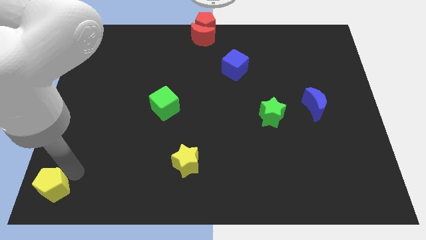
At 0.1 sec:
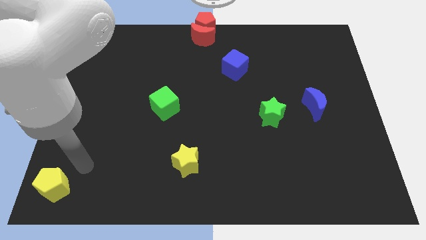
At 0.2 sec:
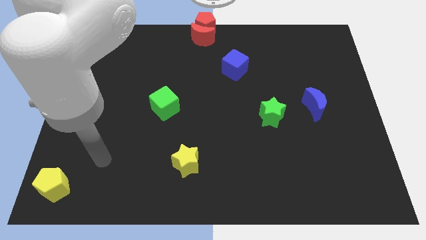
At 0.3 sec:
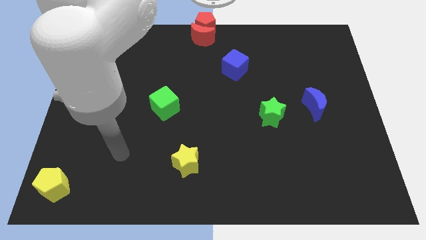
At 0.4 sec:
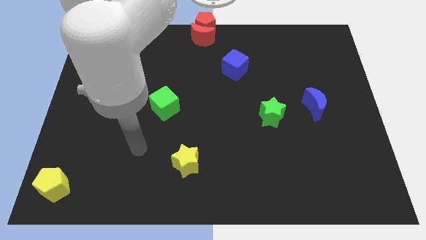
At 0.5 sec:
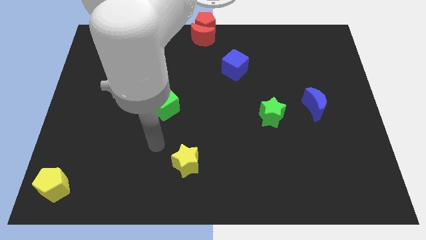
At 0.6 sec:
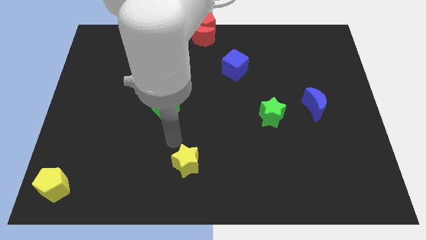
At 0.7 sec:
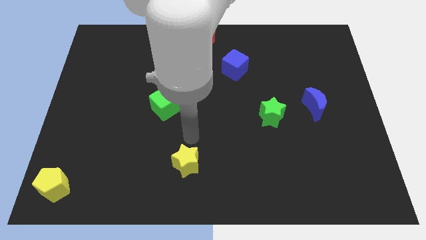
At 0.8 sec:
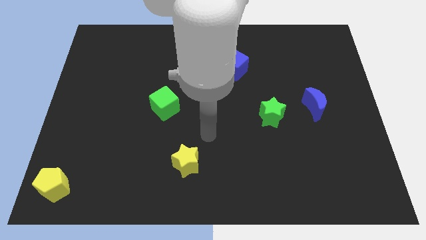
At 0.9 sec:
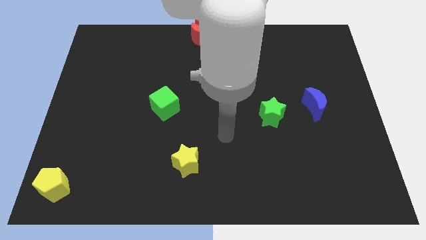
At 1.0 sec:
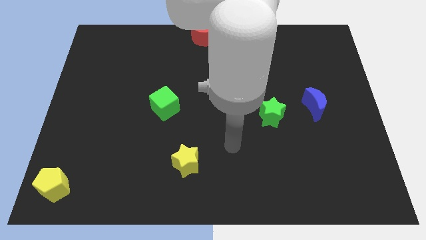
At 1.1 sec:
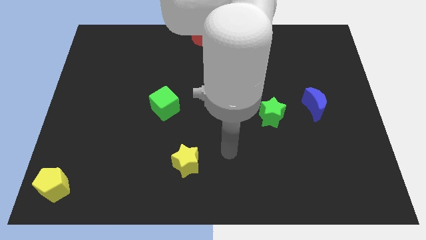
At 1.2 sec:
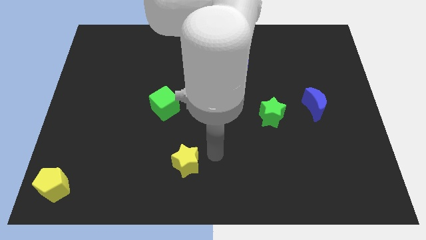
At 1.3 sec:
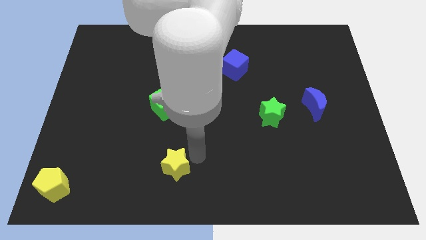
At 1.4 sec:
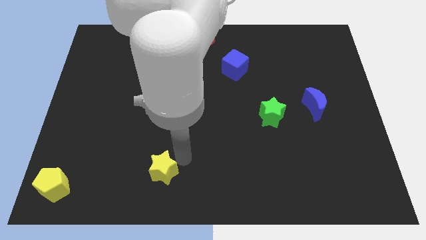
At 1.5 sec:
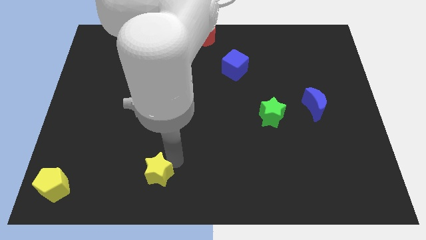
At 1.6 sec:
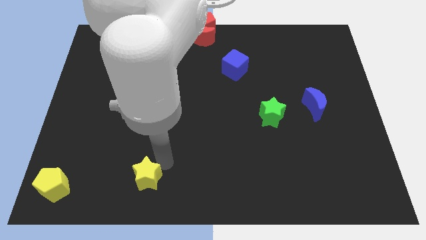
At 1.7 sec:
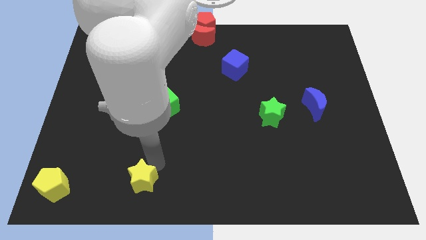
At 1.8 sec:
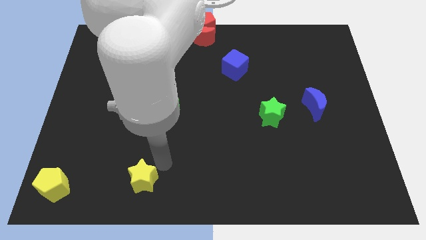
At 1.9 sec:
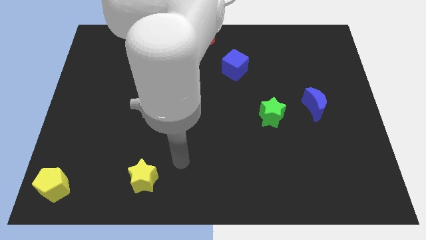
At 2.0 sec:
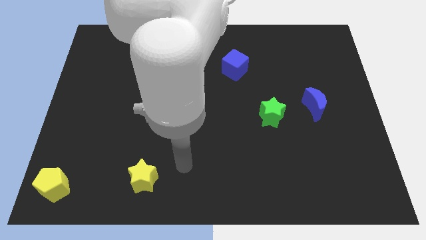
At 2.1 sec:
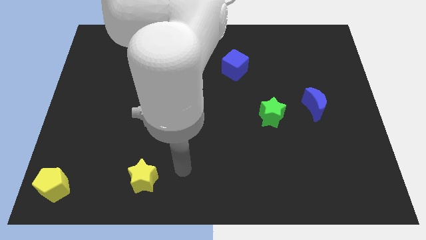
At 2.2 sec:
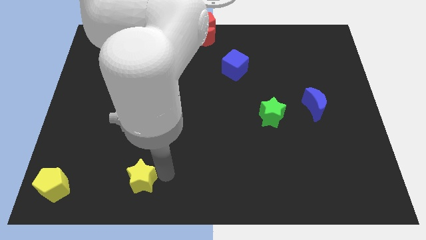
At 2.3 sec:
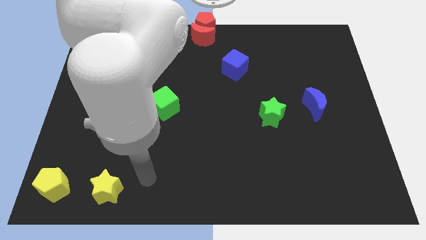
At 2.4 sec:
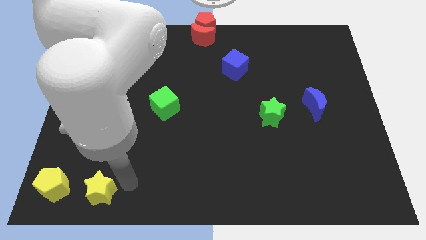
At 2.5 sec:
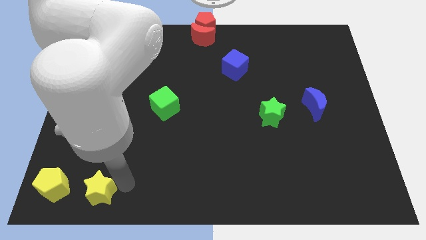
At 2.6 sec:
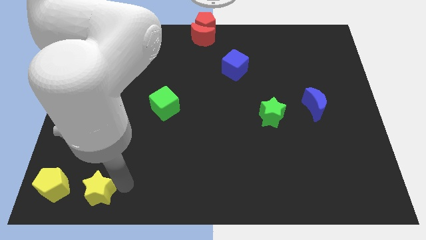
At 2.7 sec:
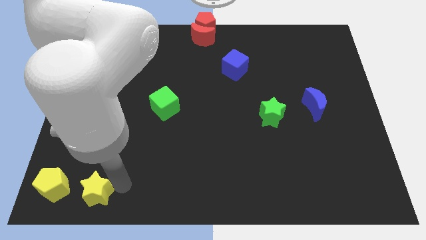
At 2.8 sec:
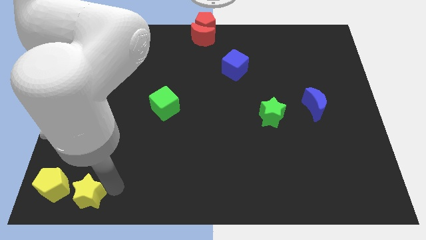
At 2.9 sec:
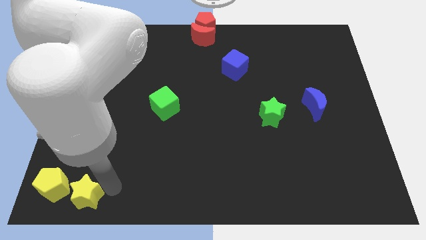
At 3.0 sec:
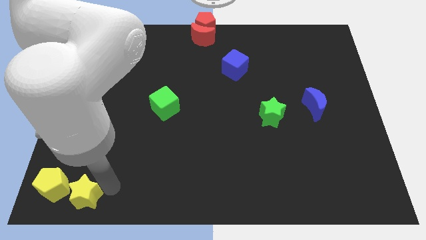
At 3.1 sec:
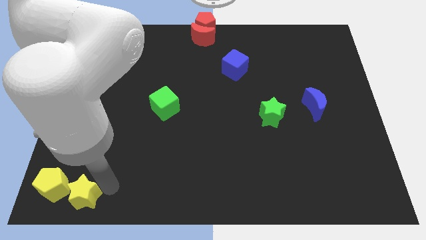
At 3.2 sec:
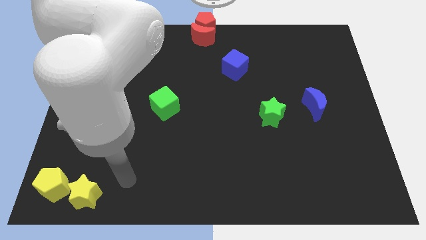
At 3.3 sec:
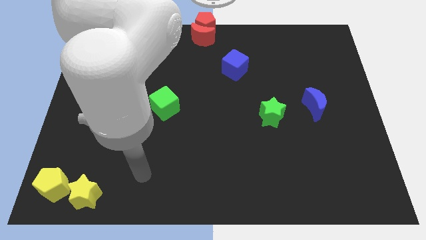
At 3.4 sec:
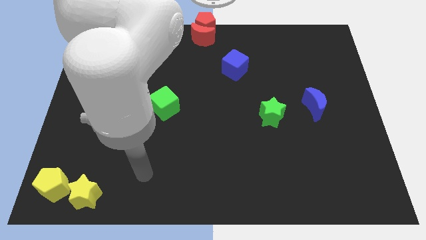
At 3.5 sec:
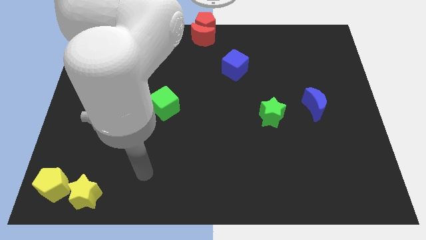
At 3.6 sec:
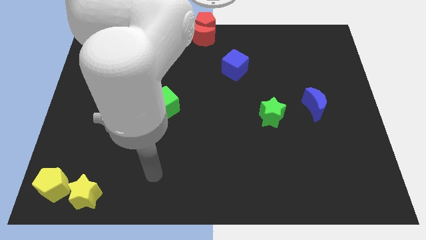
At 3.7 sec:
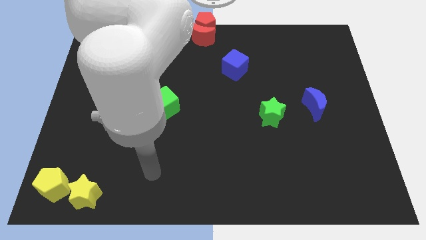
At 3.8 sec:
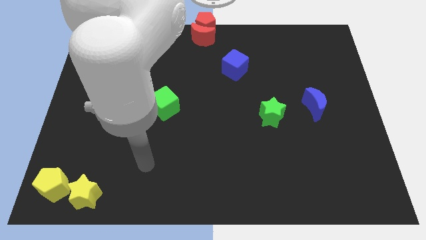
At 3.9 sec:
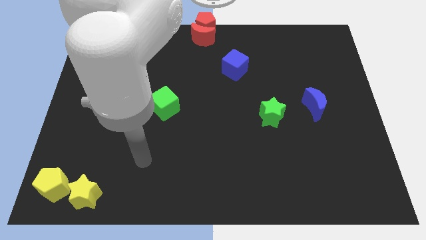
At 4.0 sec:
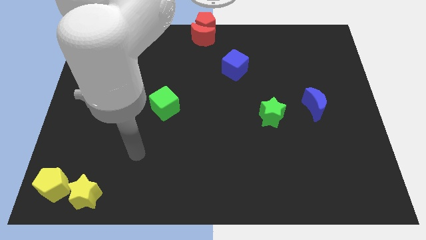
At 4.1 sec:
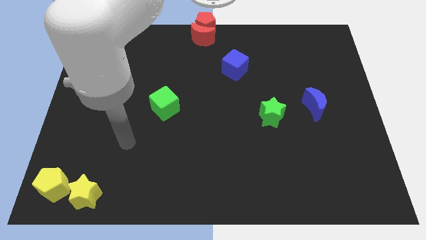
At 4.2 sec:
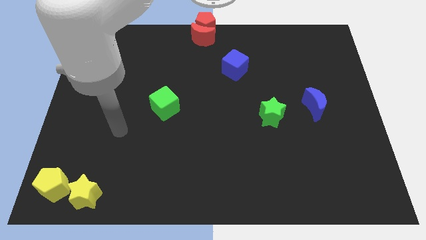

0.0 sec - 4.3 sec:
move the yellow star to the right side of the yellow pentagon

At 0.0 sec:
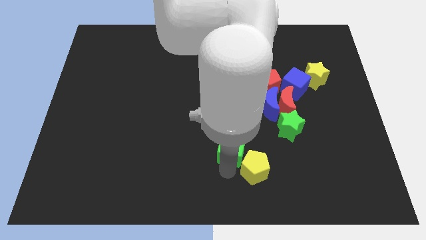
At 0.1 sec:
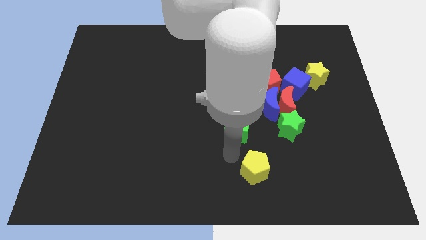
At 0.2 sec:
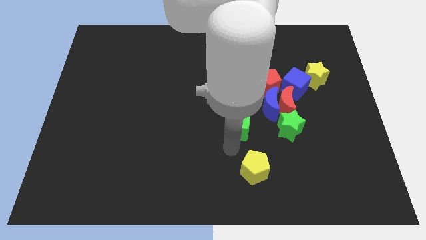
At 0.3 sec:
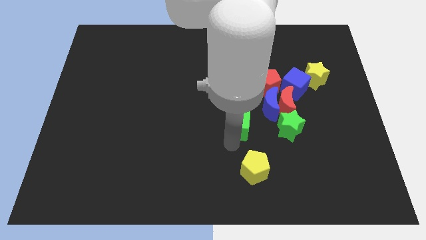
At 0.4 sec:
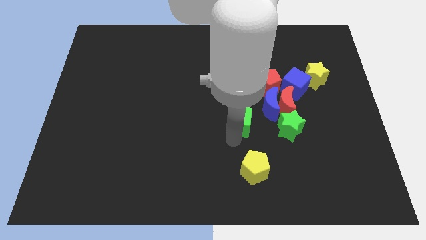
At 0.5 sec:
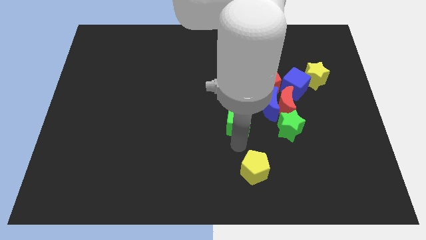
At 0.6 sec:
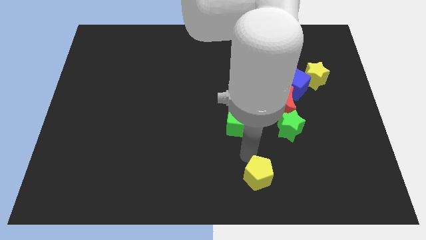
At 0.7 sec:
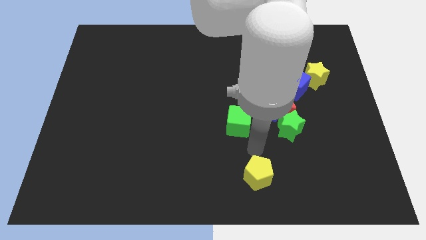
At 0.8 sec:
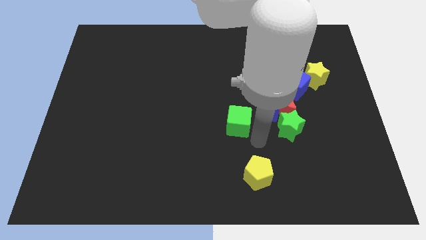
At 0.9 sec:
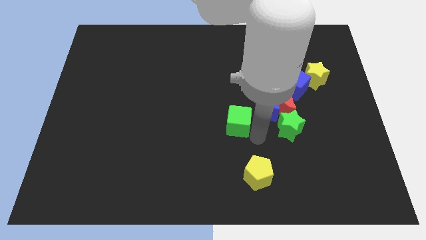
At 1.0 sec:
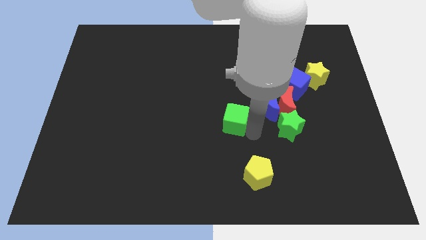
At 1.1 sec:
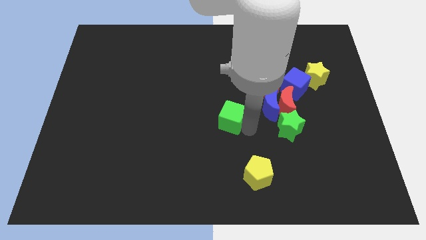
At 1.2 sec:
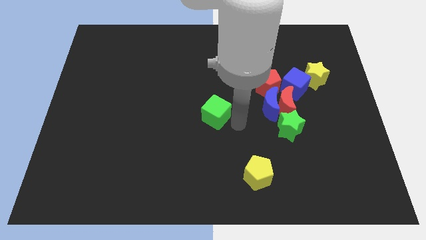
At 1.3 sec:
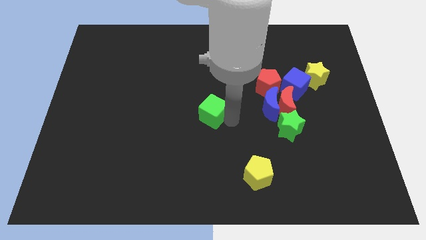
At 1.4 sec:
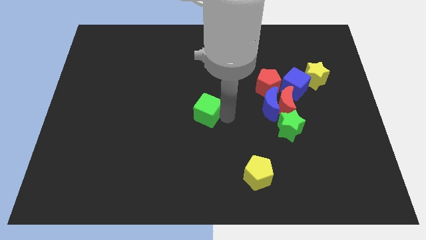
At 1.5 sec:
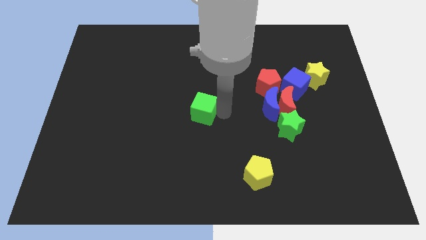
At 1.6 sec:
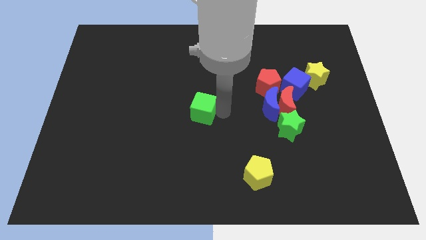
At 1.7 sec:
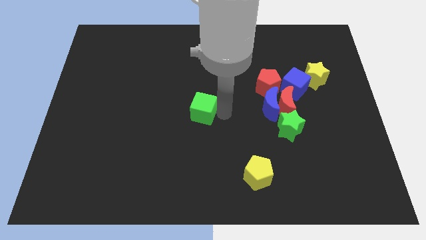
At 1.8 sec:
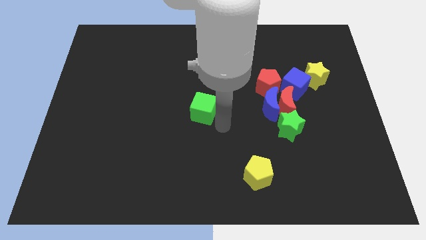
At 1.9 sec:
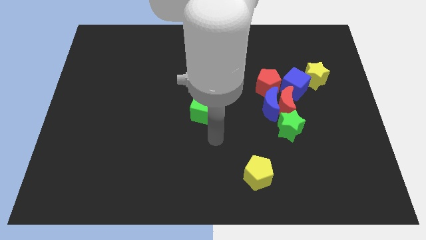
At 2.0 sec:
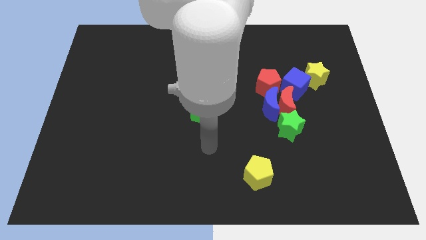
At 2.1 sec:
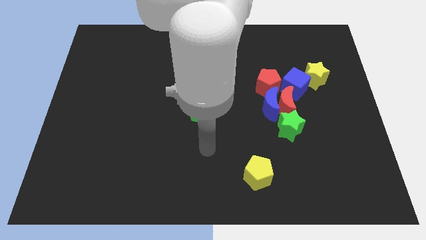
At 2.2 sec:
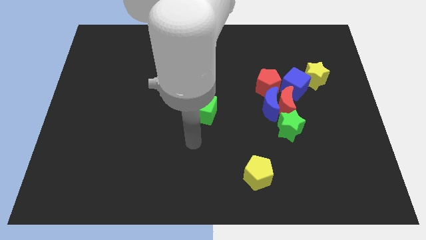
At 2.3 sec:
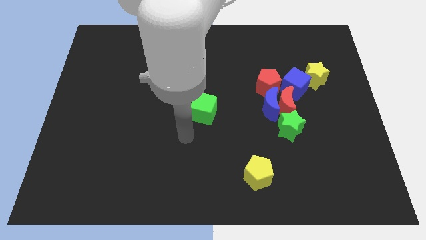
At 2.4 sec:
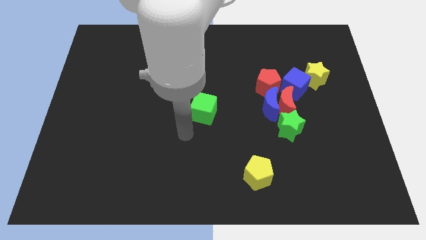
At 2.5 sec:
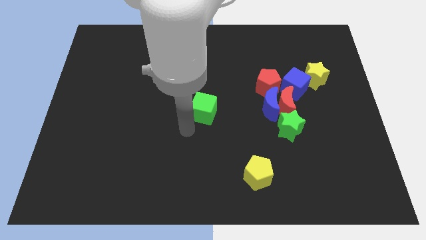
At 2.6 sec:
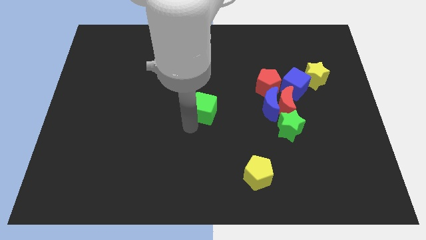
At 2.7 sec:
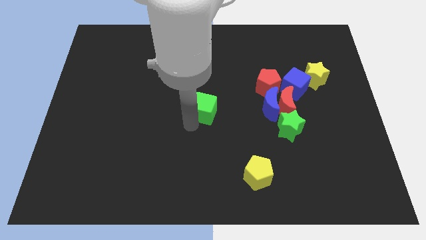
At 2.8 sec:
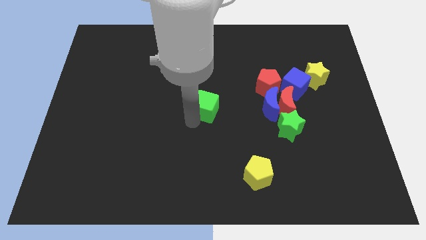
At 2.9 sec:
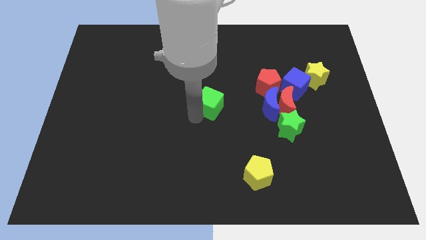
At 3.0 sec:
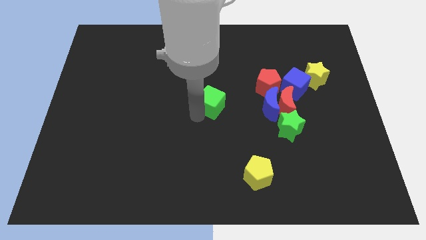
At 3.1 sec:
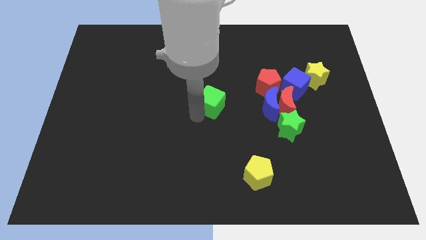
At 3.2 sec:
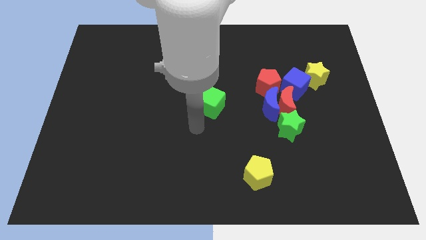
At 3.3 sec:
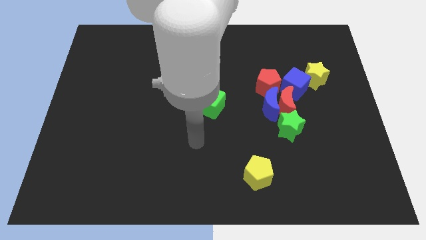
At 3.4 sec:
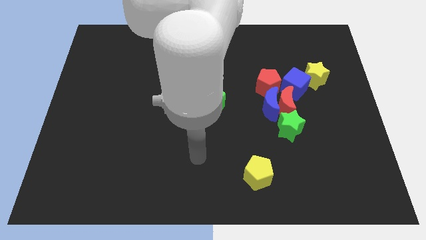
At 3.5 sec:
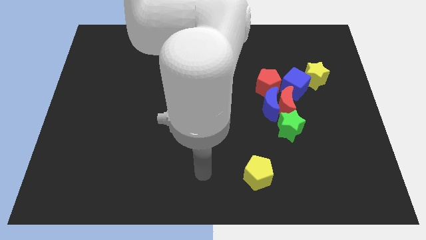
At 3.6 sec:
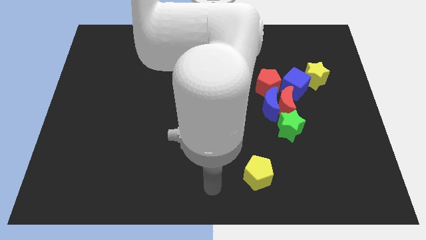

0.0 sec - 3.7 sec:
move the green cube towards up

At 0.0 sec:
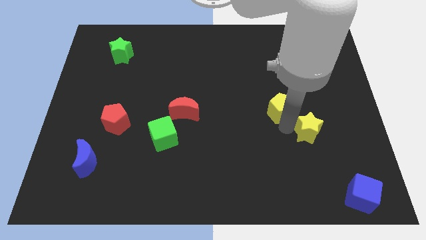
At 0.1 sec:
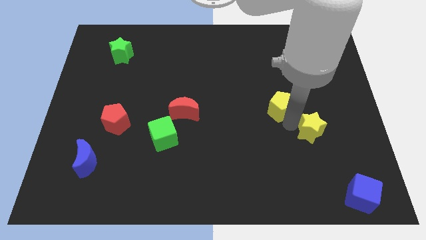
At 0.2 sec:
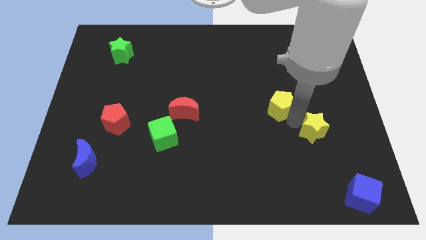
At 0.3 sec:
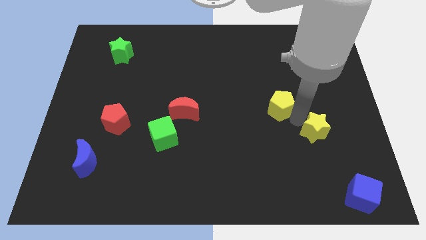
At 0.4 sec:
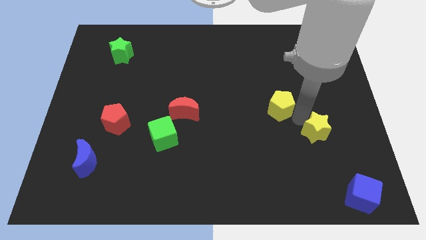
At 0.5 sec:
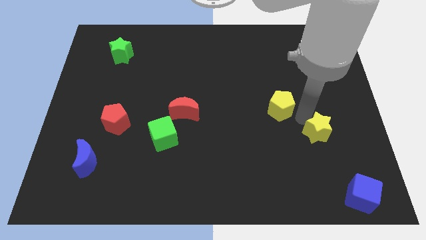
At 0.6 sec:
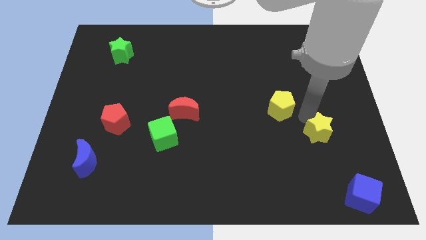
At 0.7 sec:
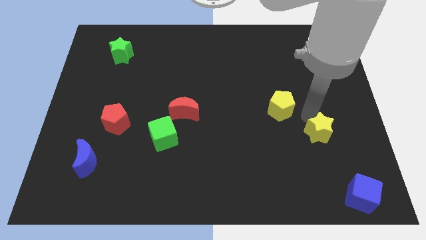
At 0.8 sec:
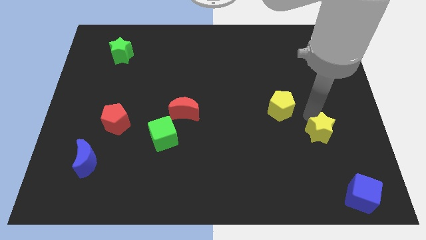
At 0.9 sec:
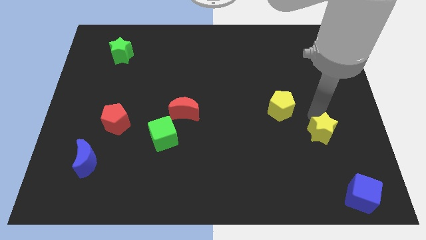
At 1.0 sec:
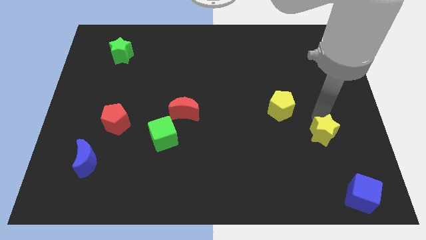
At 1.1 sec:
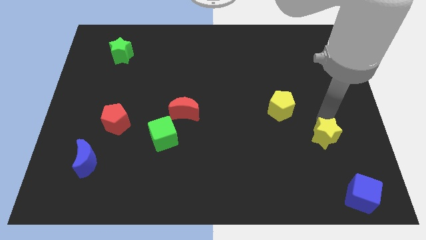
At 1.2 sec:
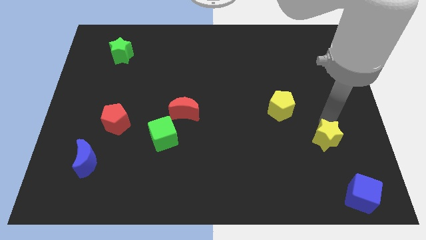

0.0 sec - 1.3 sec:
separate yellow star from yellow pentagon
